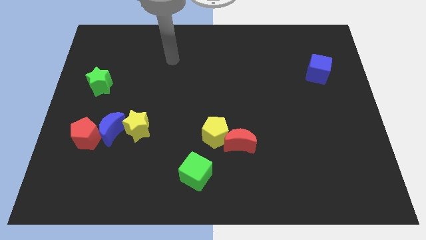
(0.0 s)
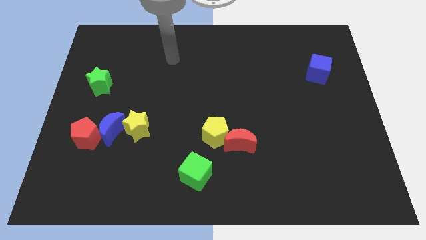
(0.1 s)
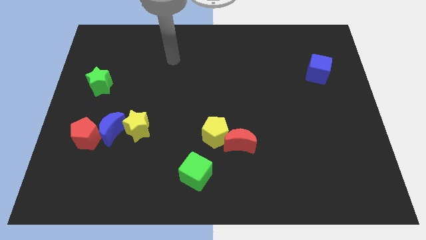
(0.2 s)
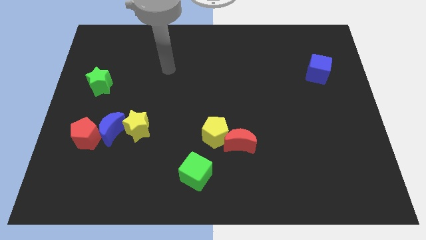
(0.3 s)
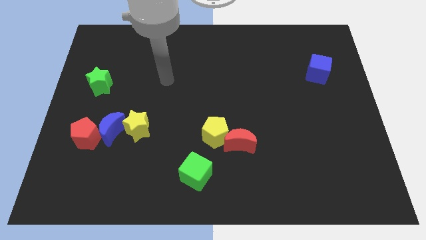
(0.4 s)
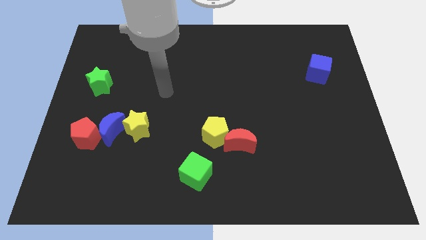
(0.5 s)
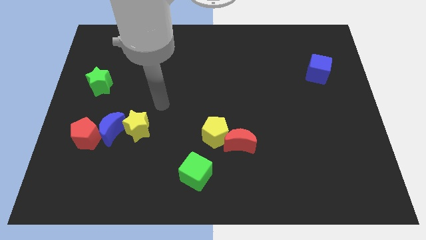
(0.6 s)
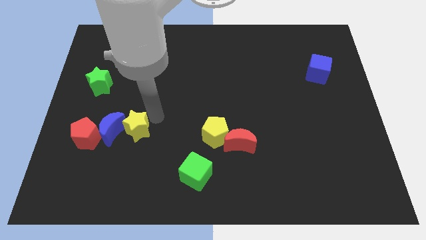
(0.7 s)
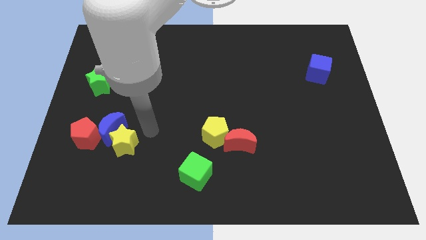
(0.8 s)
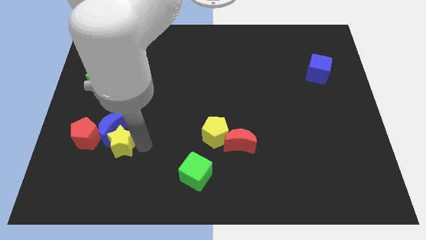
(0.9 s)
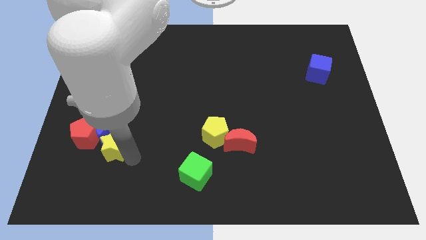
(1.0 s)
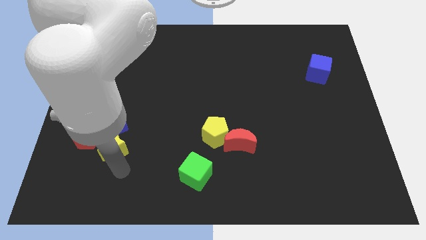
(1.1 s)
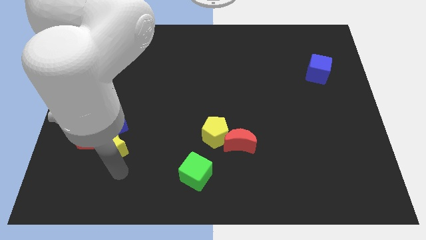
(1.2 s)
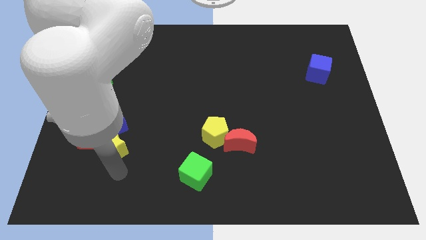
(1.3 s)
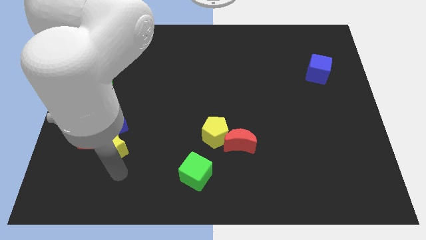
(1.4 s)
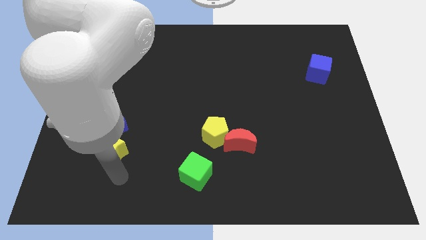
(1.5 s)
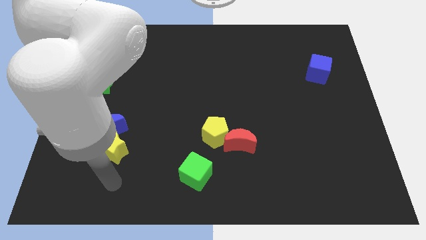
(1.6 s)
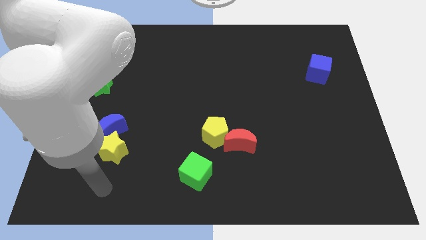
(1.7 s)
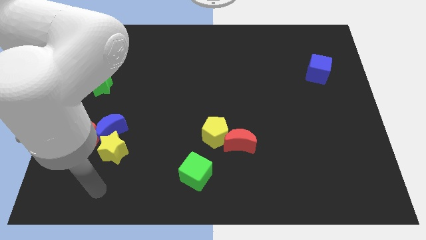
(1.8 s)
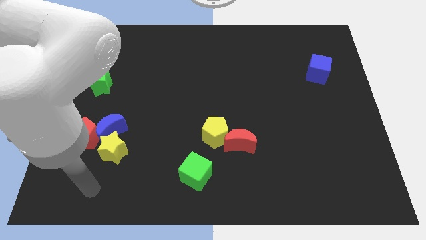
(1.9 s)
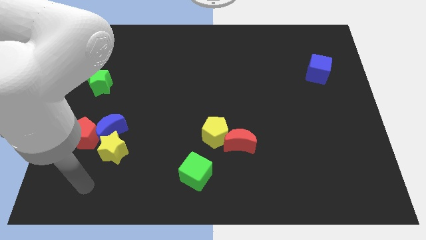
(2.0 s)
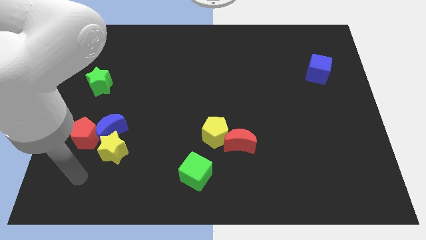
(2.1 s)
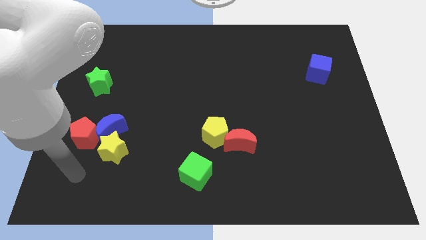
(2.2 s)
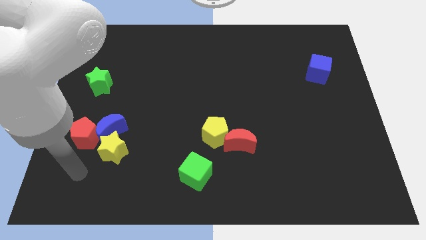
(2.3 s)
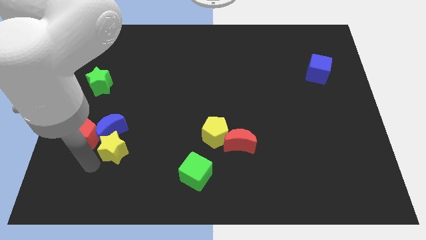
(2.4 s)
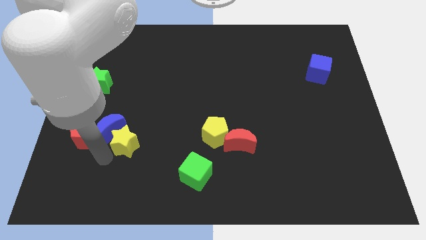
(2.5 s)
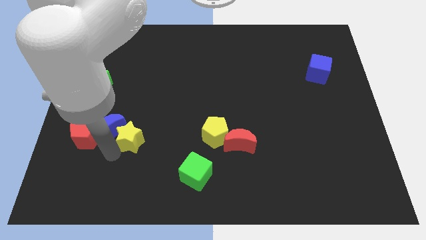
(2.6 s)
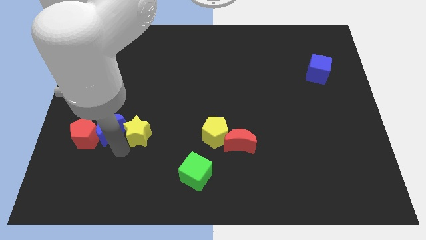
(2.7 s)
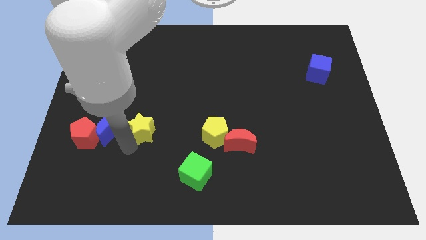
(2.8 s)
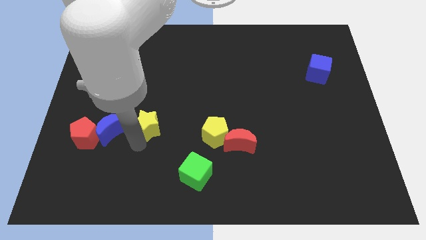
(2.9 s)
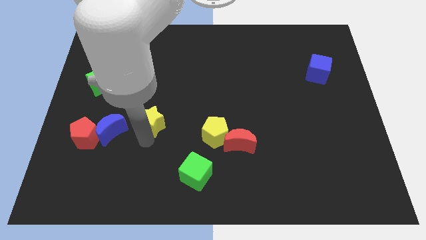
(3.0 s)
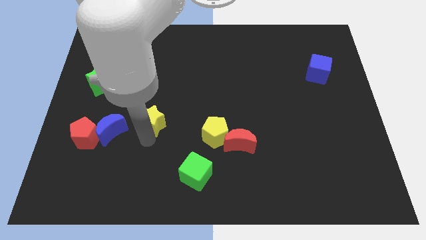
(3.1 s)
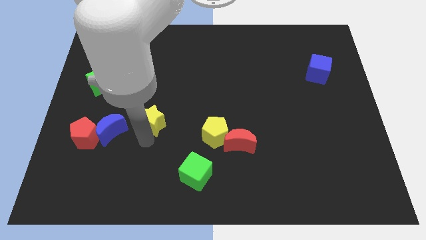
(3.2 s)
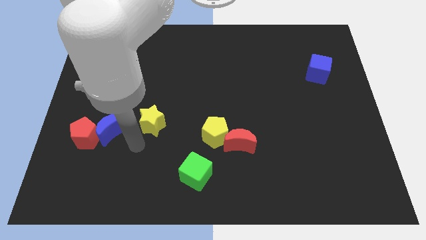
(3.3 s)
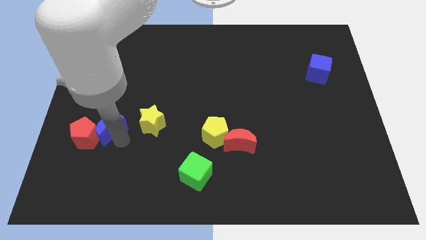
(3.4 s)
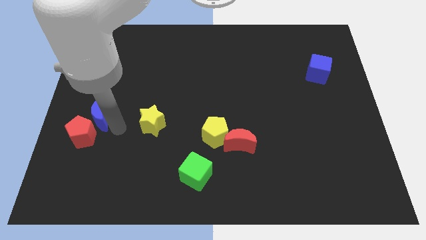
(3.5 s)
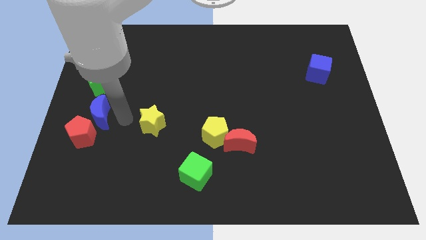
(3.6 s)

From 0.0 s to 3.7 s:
separate the yellow star from the blue moon

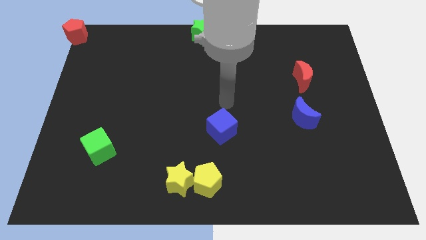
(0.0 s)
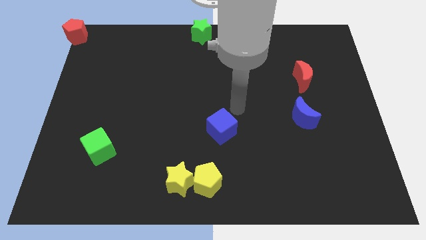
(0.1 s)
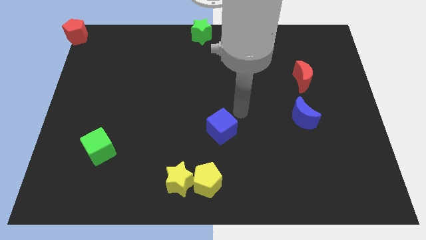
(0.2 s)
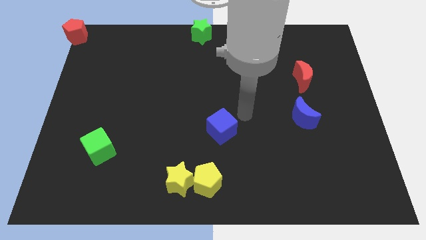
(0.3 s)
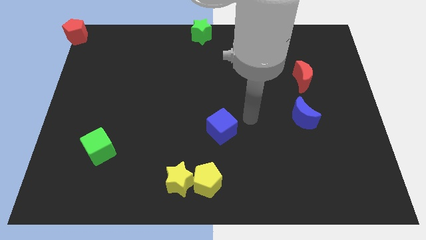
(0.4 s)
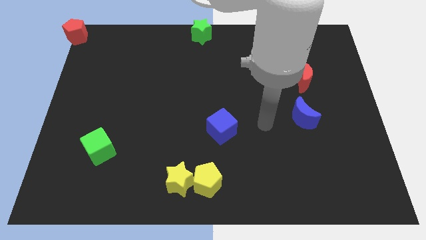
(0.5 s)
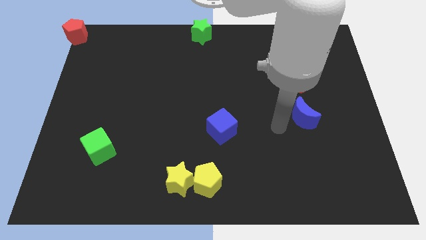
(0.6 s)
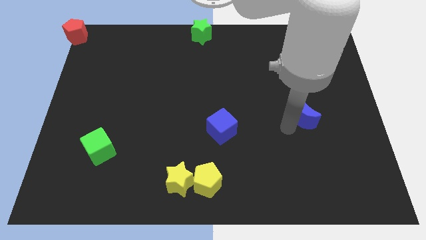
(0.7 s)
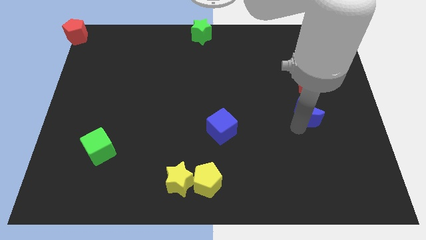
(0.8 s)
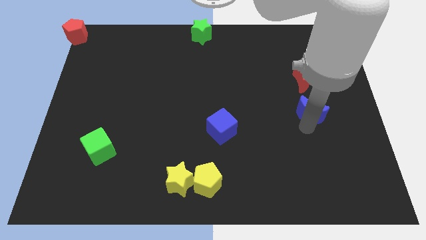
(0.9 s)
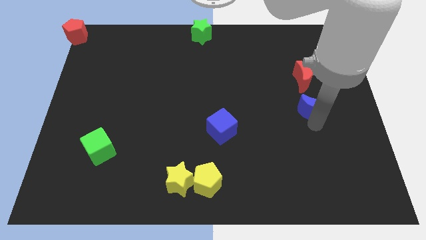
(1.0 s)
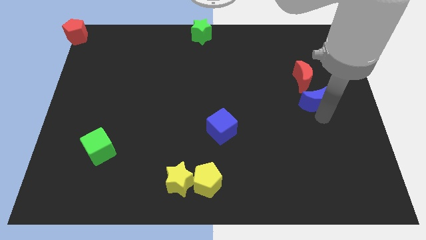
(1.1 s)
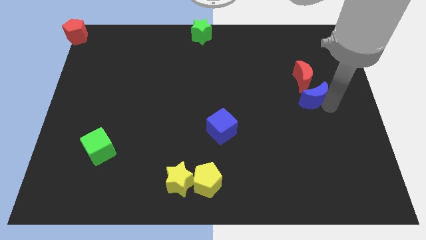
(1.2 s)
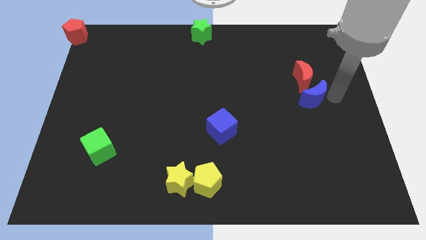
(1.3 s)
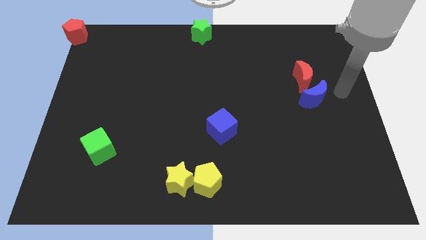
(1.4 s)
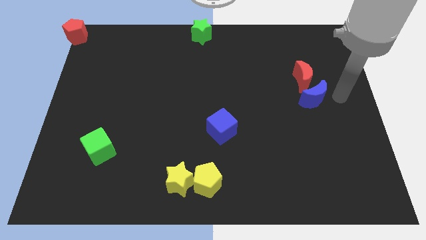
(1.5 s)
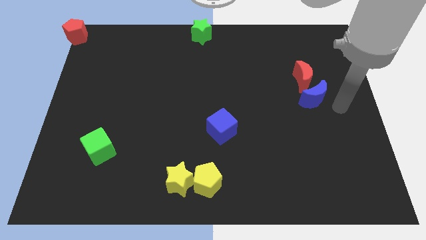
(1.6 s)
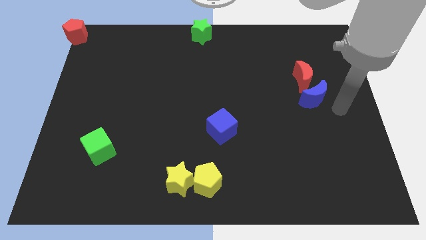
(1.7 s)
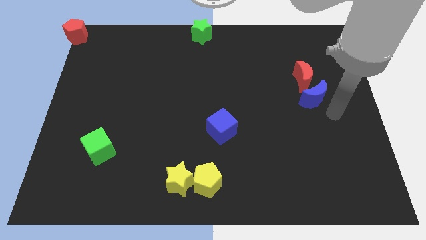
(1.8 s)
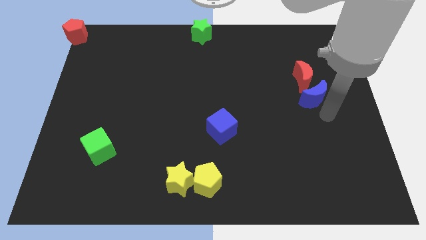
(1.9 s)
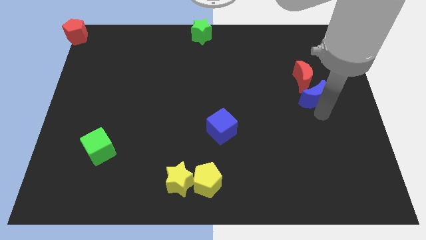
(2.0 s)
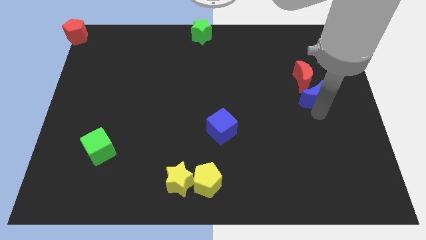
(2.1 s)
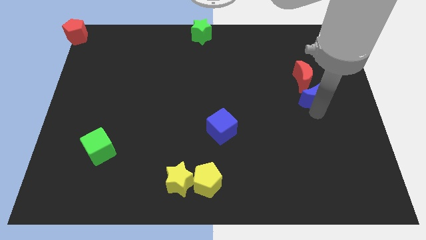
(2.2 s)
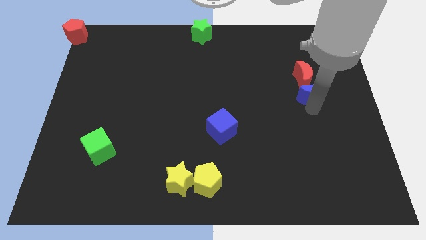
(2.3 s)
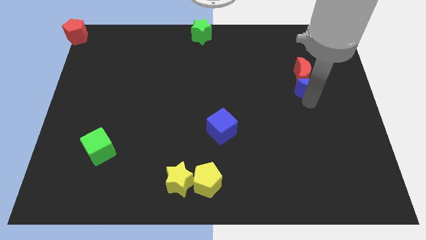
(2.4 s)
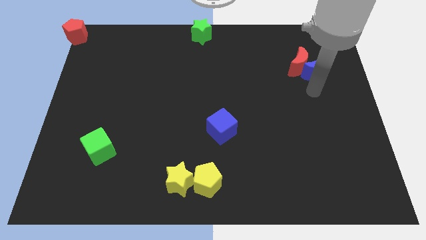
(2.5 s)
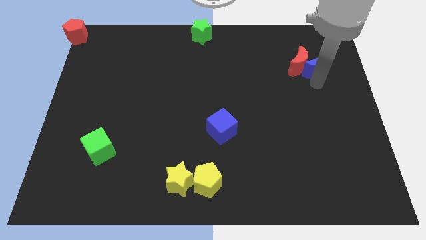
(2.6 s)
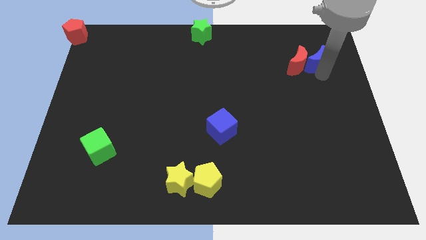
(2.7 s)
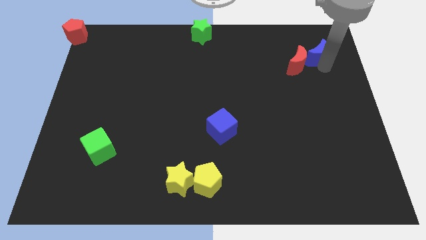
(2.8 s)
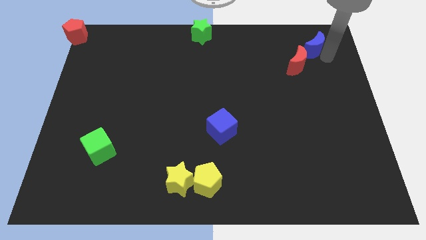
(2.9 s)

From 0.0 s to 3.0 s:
push the blue moon into the red moon

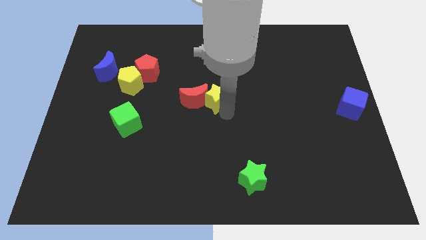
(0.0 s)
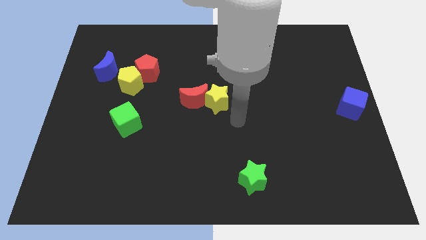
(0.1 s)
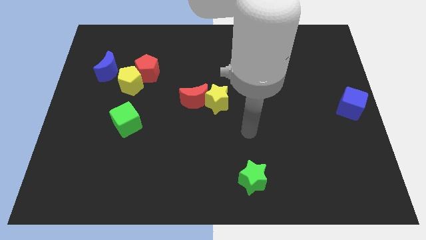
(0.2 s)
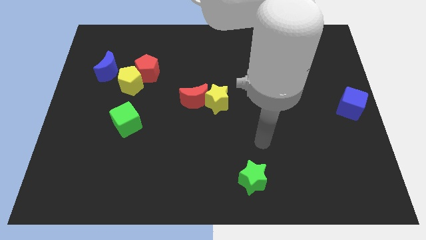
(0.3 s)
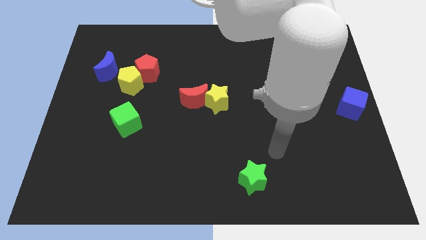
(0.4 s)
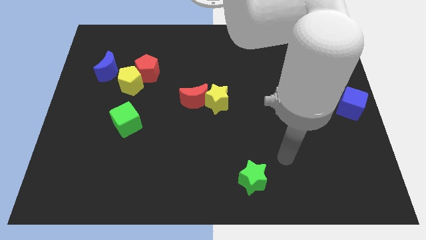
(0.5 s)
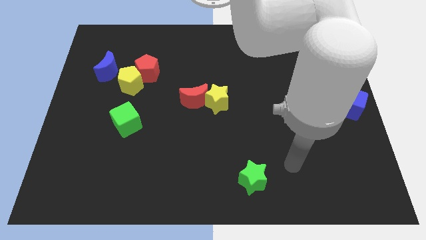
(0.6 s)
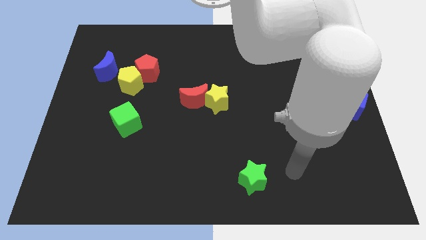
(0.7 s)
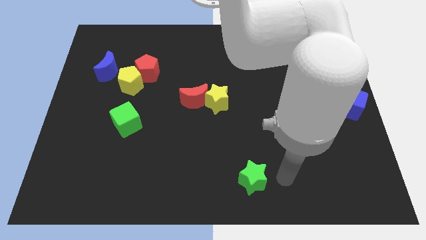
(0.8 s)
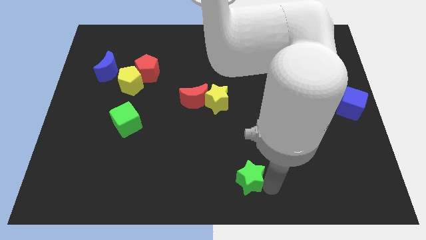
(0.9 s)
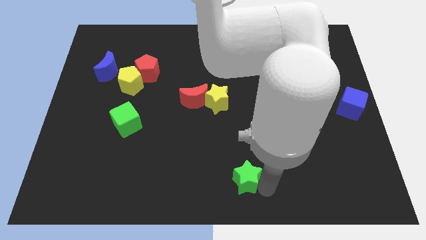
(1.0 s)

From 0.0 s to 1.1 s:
move your arm away from the yellow star

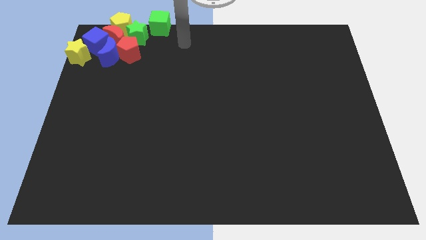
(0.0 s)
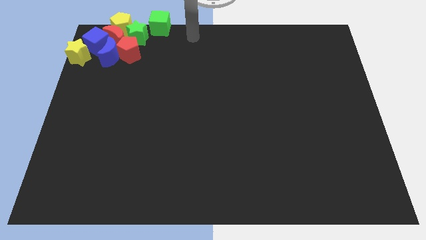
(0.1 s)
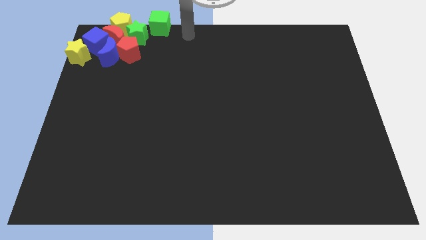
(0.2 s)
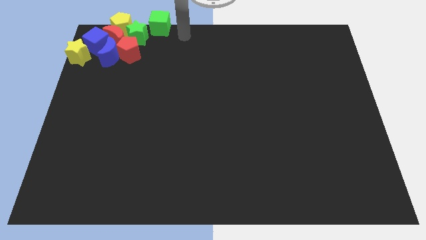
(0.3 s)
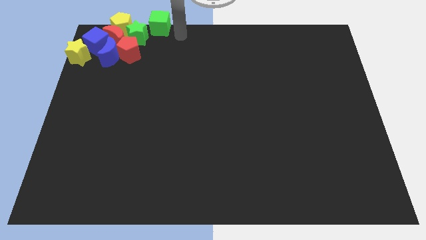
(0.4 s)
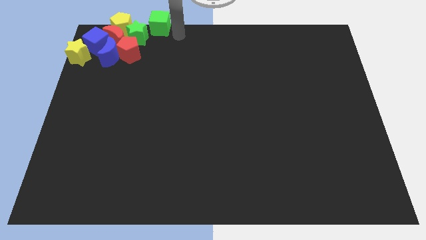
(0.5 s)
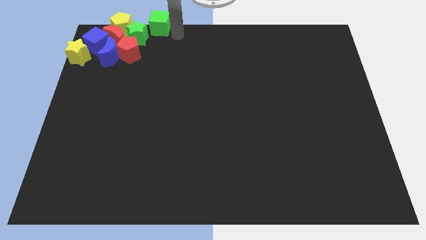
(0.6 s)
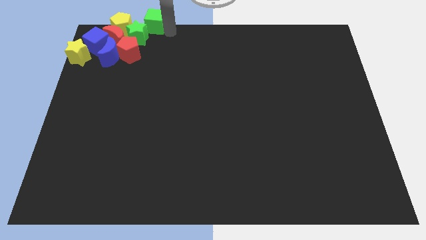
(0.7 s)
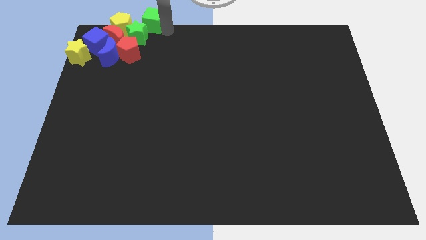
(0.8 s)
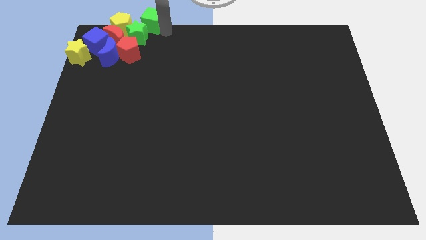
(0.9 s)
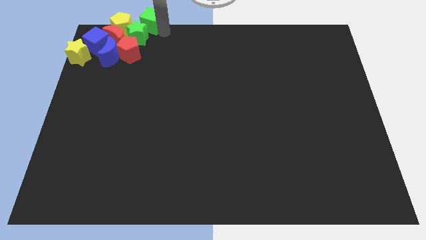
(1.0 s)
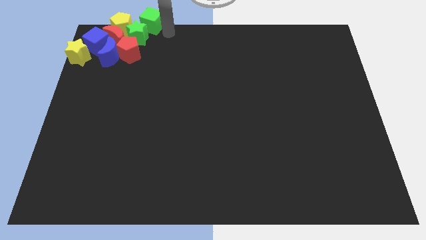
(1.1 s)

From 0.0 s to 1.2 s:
push the green cube slightly to the left
